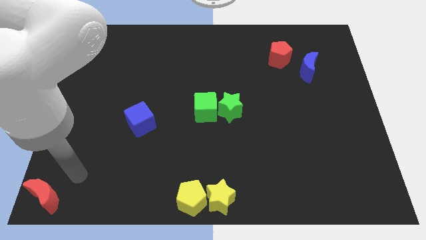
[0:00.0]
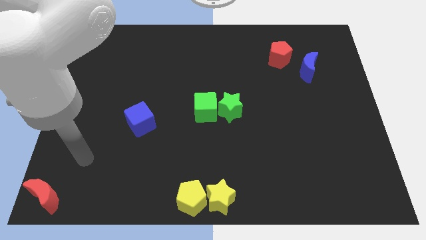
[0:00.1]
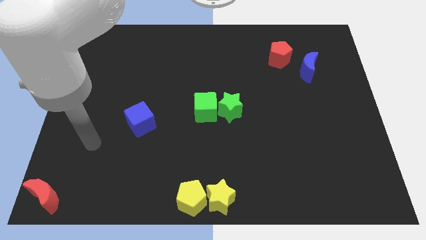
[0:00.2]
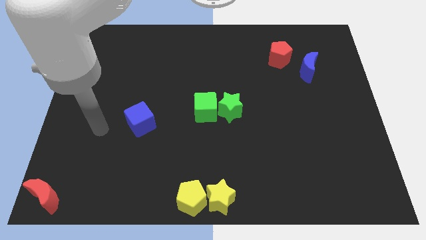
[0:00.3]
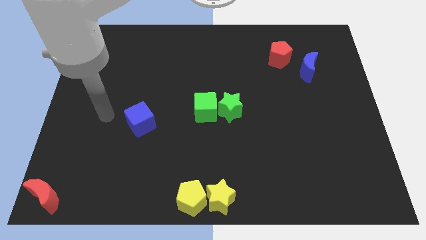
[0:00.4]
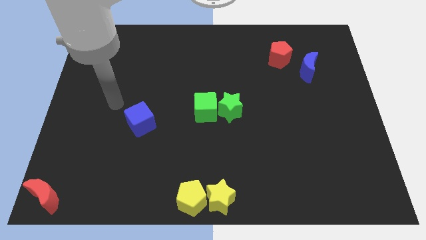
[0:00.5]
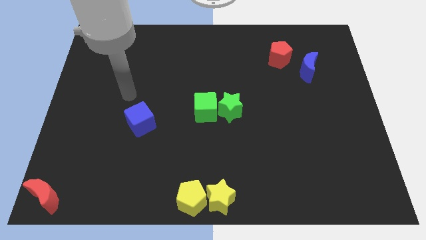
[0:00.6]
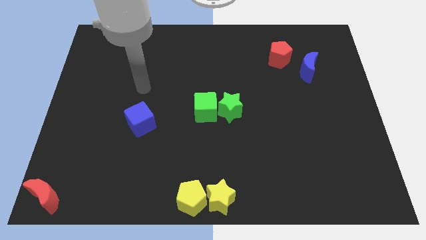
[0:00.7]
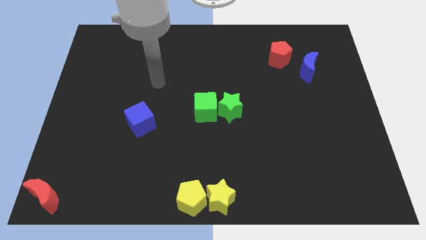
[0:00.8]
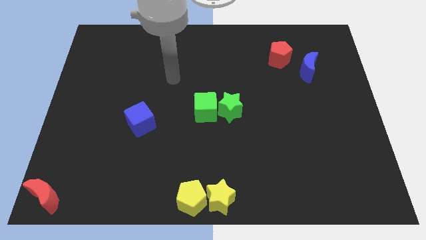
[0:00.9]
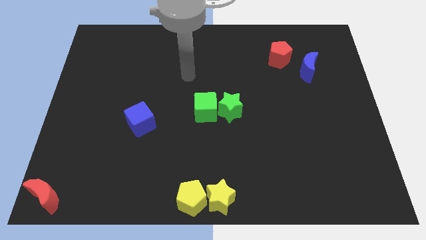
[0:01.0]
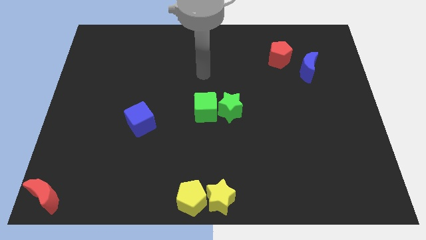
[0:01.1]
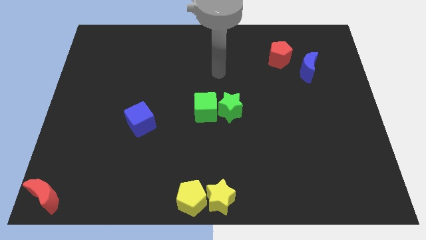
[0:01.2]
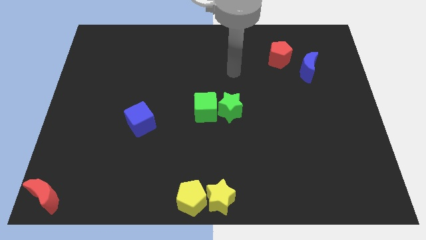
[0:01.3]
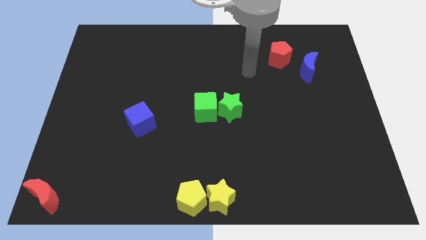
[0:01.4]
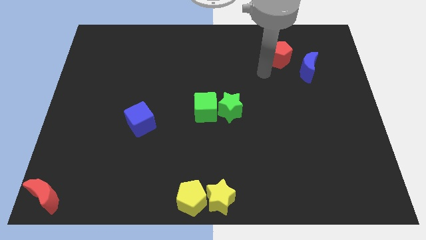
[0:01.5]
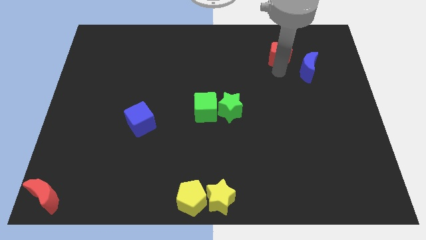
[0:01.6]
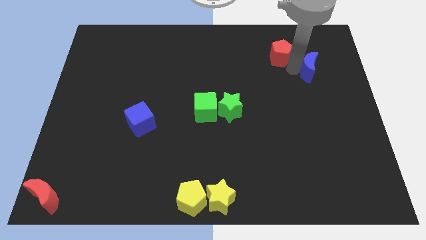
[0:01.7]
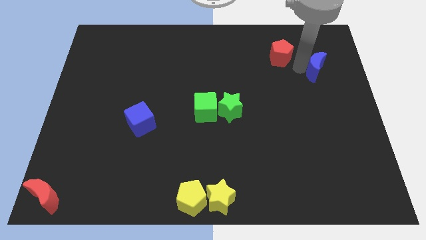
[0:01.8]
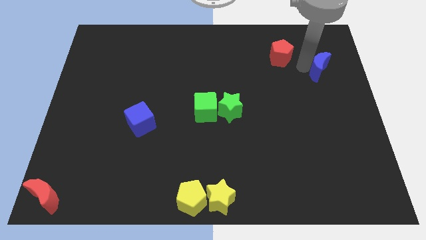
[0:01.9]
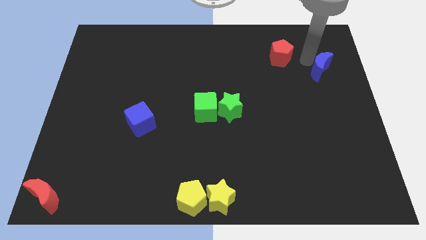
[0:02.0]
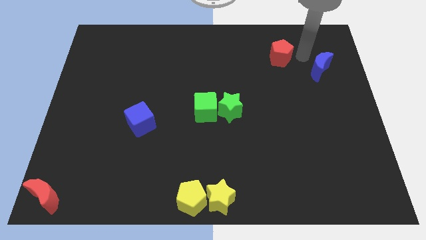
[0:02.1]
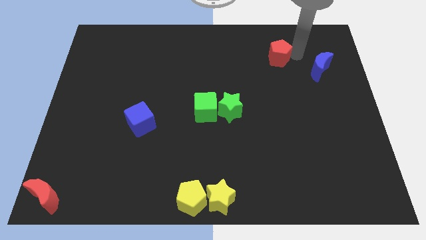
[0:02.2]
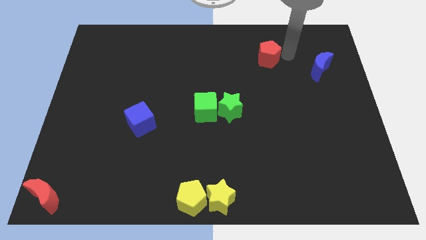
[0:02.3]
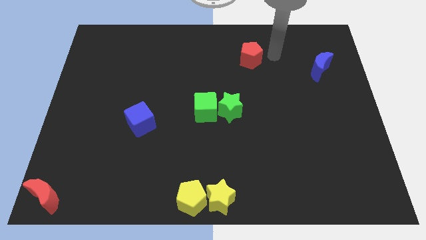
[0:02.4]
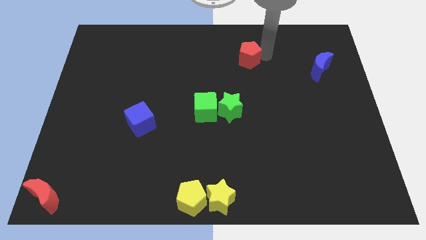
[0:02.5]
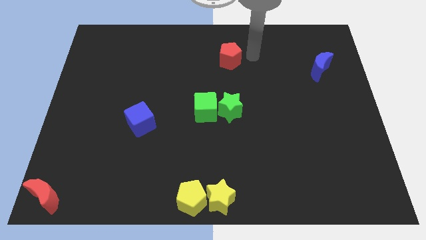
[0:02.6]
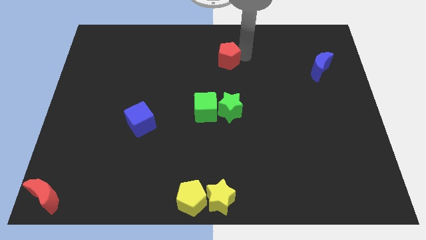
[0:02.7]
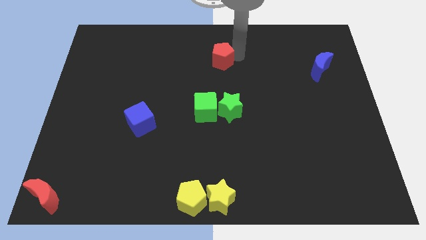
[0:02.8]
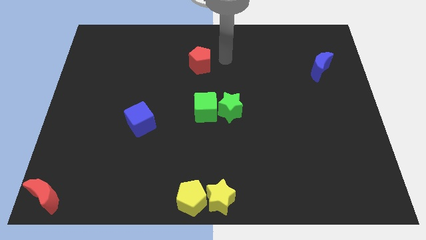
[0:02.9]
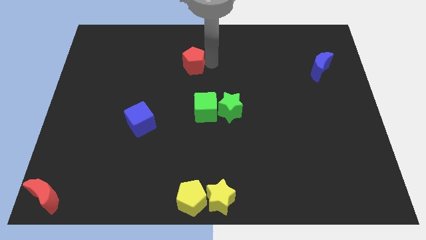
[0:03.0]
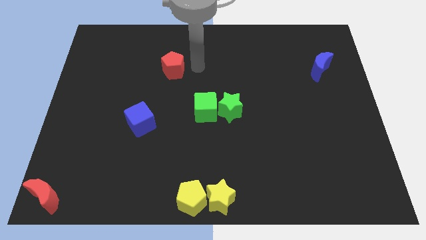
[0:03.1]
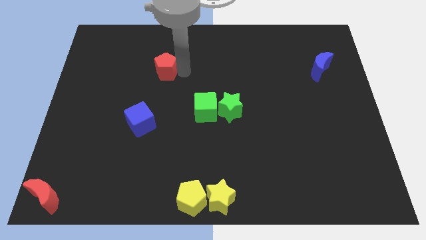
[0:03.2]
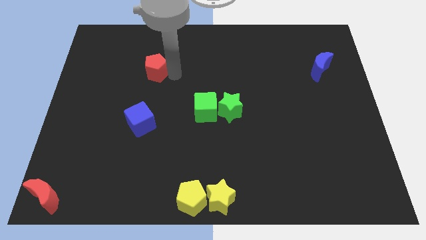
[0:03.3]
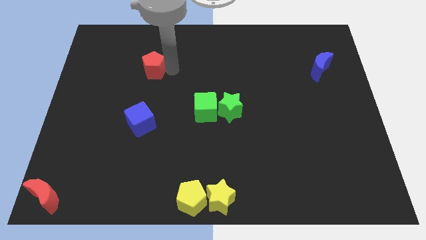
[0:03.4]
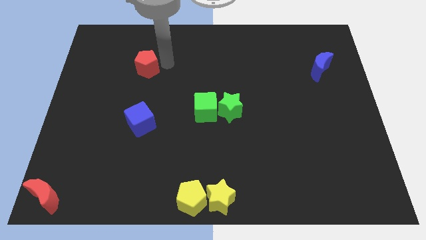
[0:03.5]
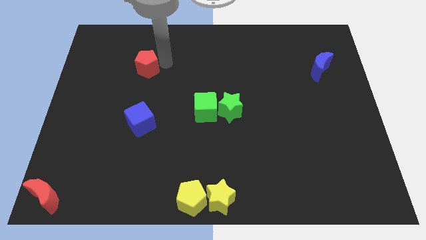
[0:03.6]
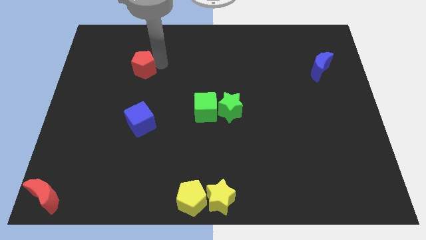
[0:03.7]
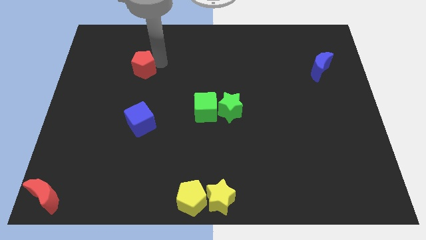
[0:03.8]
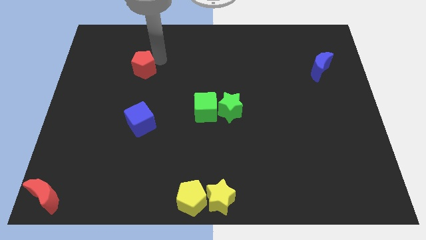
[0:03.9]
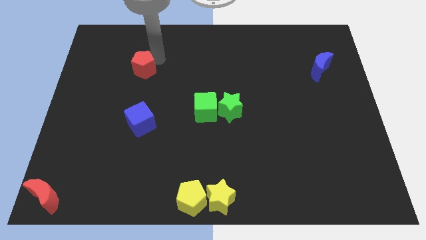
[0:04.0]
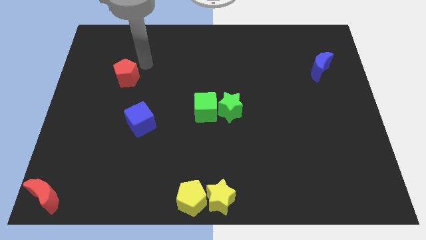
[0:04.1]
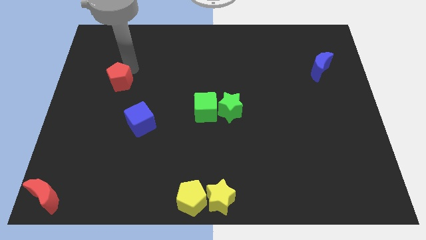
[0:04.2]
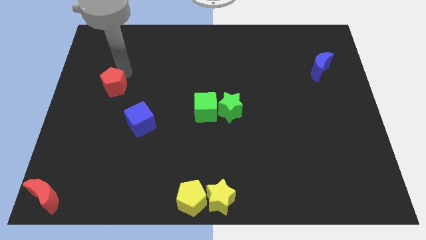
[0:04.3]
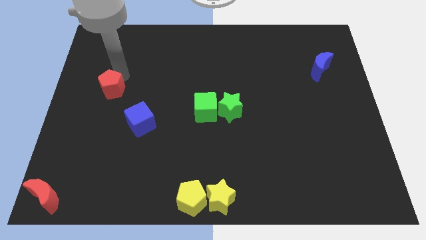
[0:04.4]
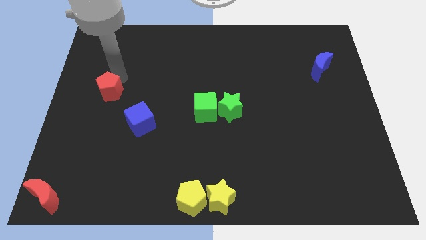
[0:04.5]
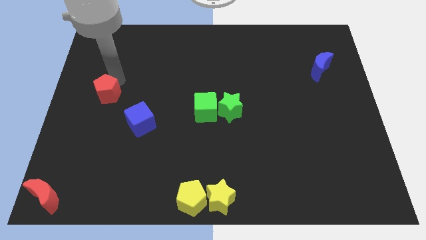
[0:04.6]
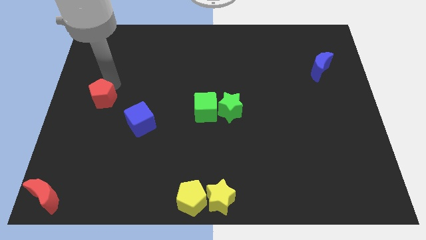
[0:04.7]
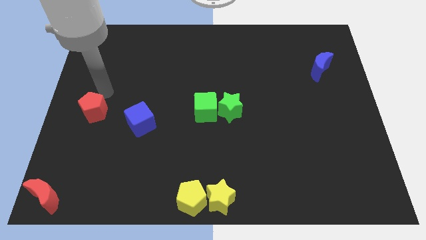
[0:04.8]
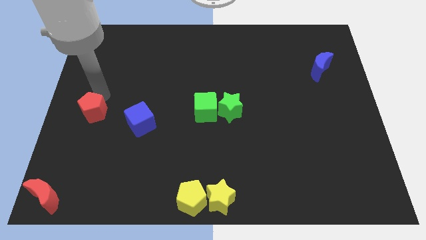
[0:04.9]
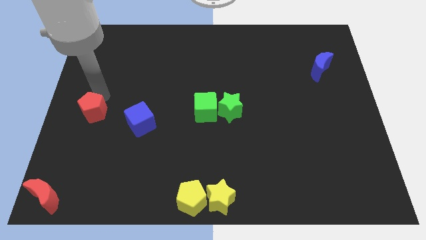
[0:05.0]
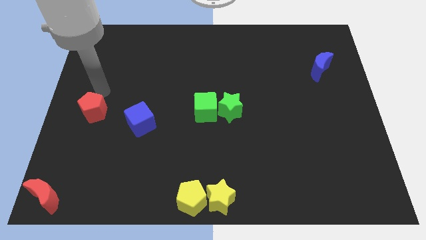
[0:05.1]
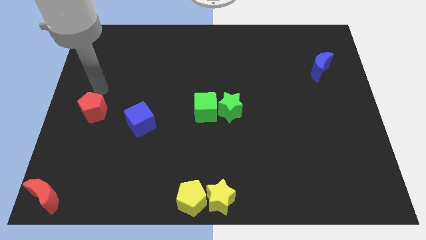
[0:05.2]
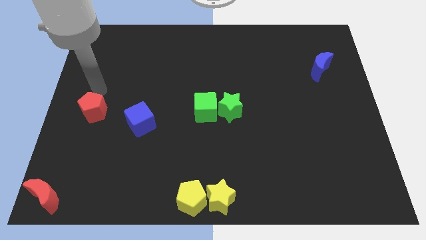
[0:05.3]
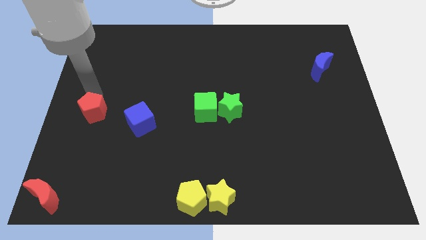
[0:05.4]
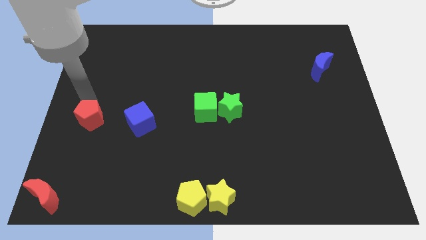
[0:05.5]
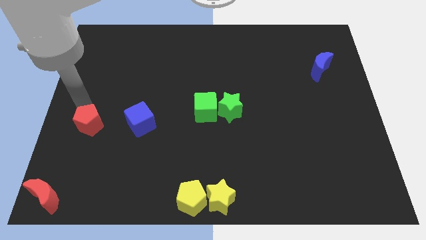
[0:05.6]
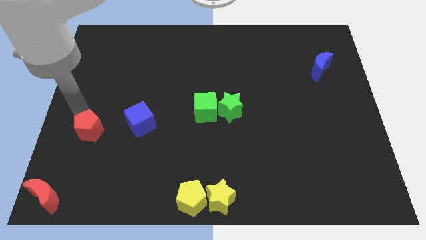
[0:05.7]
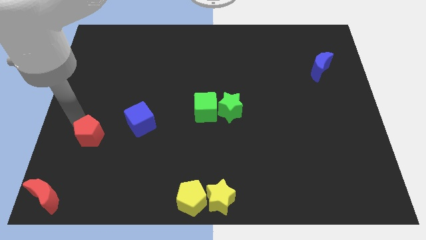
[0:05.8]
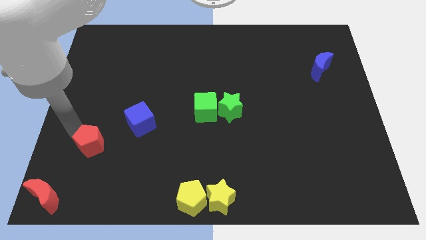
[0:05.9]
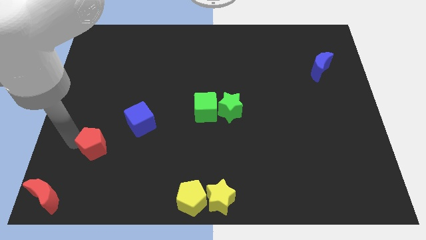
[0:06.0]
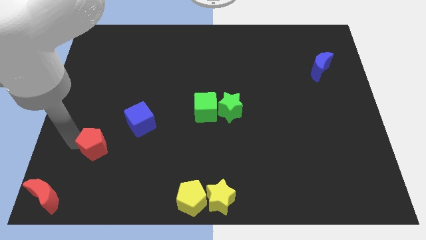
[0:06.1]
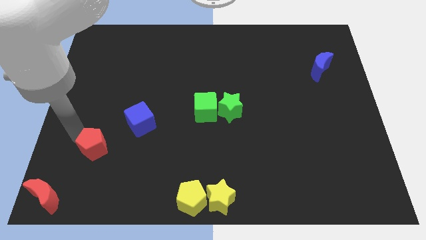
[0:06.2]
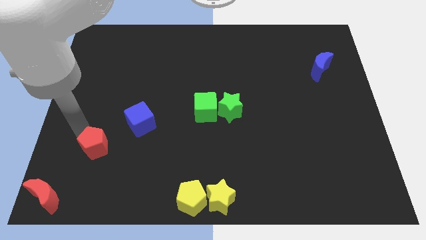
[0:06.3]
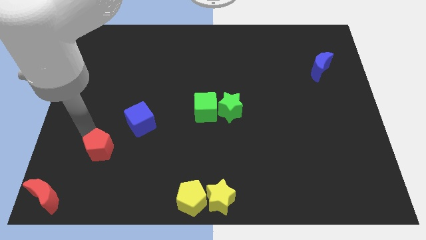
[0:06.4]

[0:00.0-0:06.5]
move the red pentagon in between the blue cube and red crescent

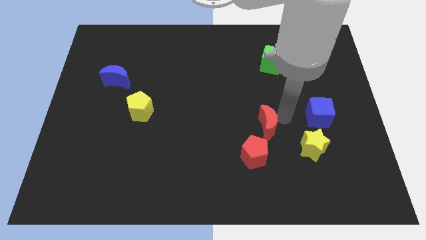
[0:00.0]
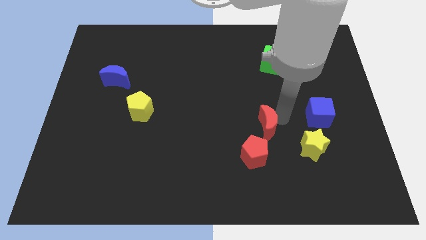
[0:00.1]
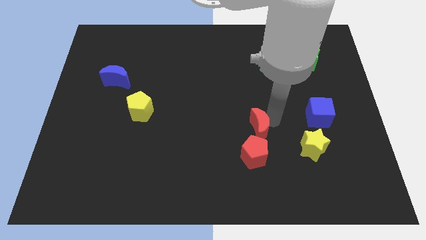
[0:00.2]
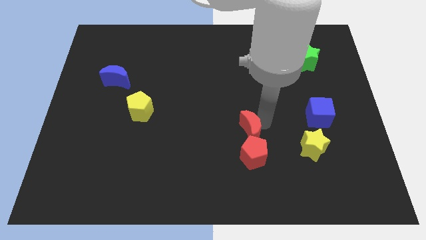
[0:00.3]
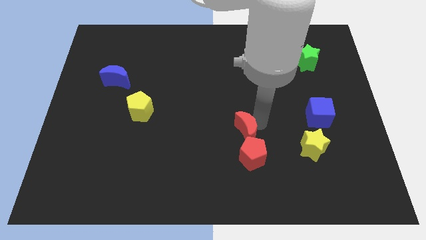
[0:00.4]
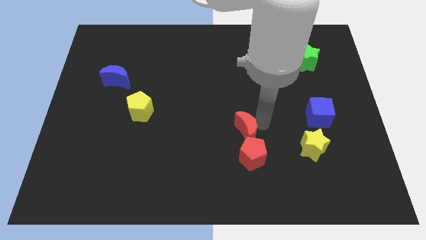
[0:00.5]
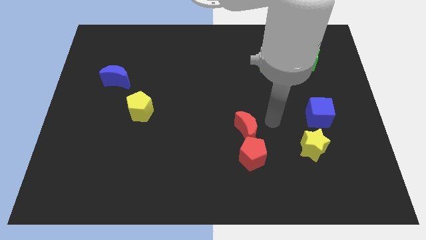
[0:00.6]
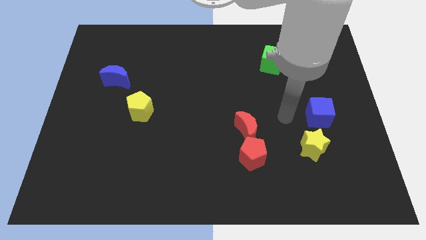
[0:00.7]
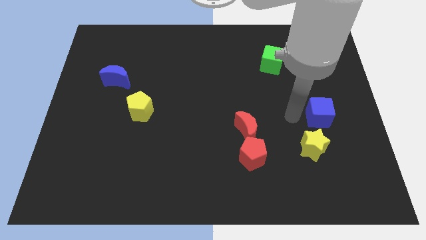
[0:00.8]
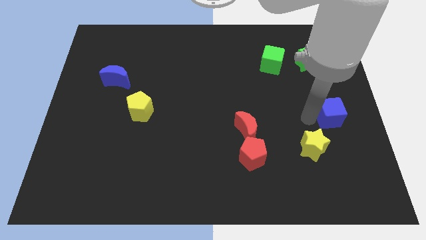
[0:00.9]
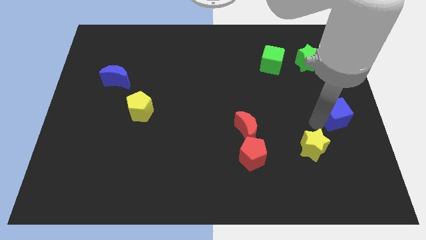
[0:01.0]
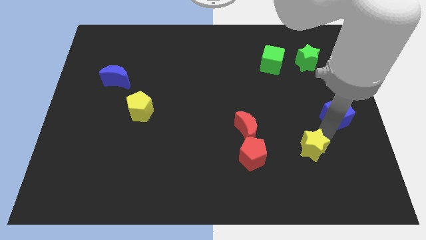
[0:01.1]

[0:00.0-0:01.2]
push the red moon to the left

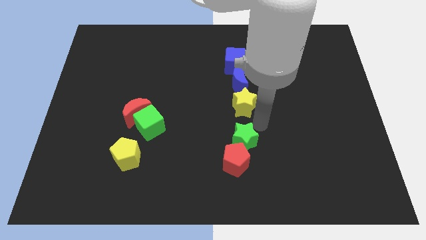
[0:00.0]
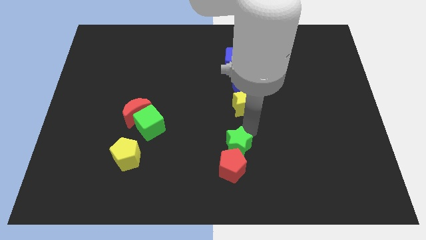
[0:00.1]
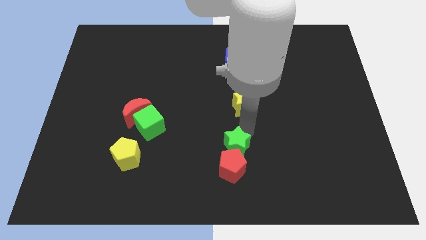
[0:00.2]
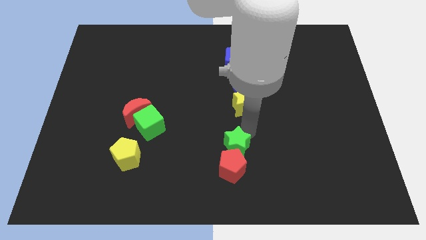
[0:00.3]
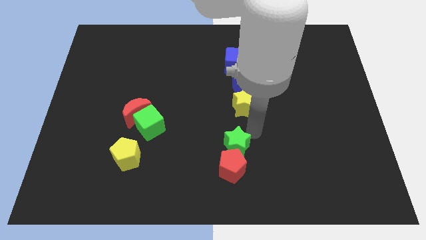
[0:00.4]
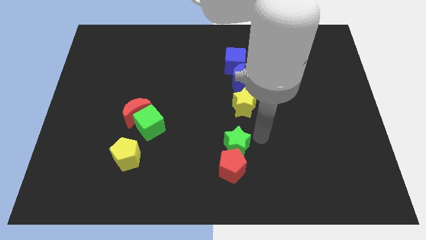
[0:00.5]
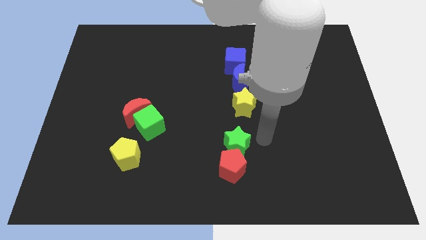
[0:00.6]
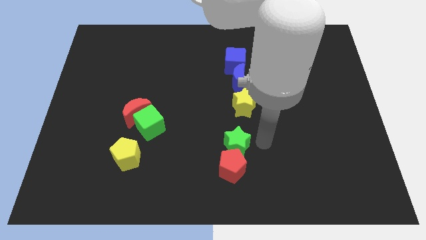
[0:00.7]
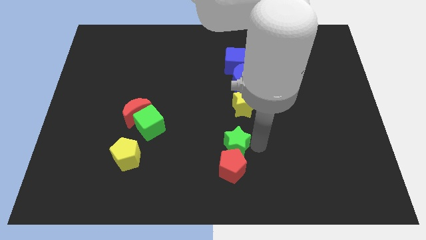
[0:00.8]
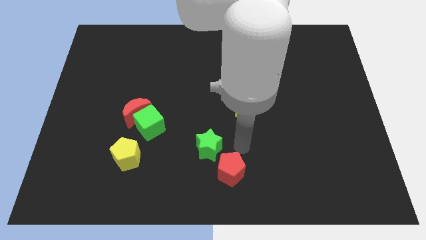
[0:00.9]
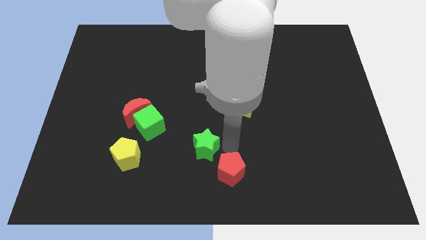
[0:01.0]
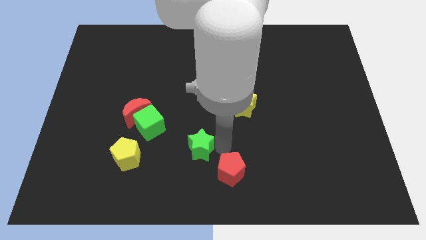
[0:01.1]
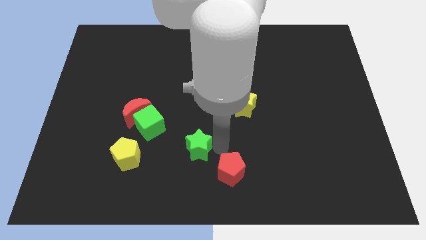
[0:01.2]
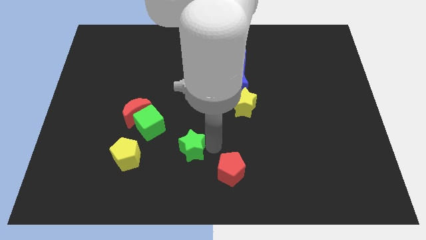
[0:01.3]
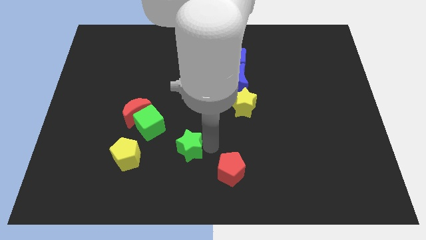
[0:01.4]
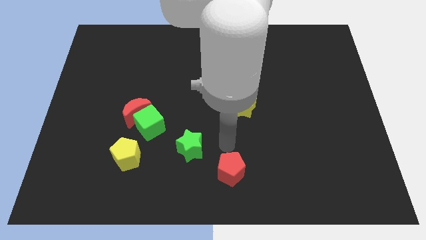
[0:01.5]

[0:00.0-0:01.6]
separate the green star from the red pentagon
